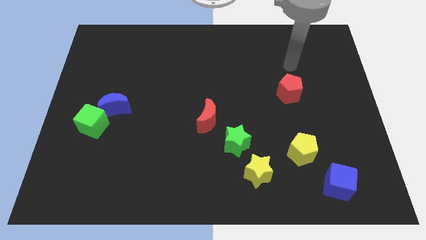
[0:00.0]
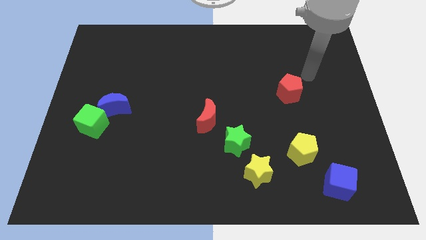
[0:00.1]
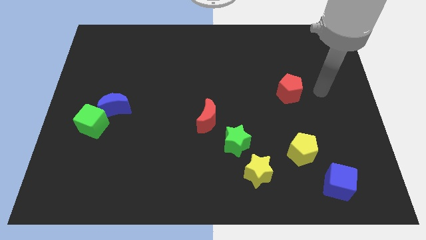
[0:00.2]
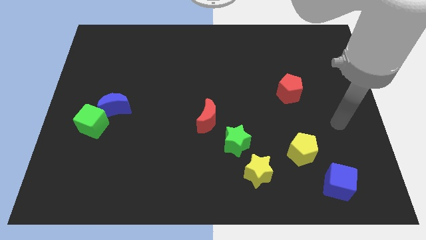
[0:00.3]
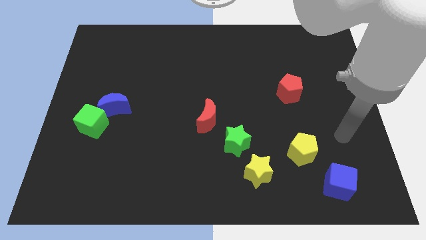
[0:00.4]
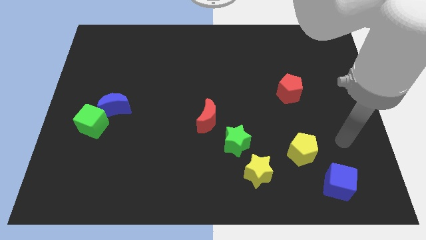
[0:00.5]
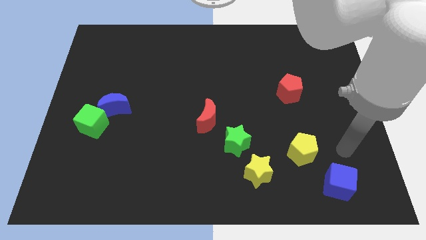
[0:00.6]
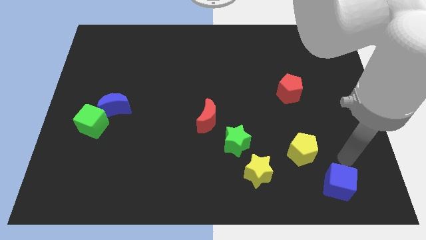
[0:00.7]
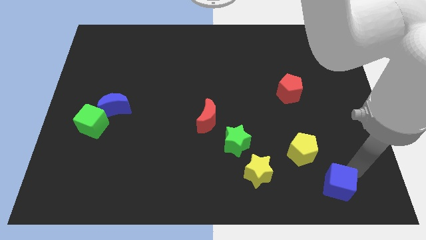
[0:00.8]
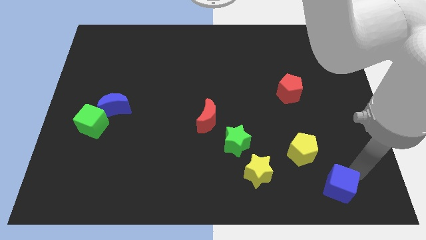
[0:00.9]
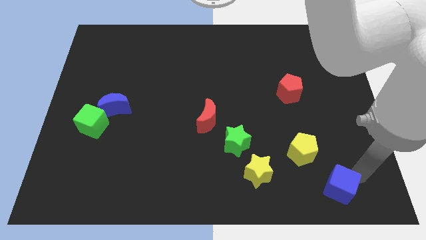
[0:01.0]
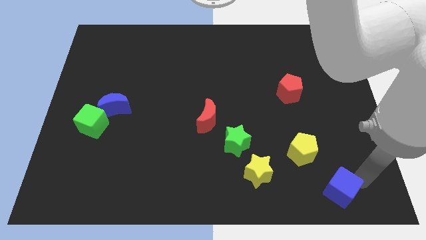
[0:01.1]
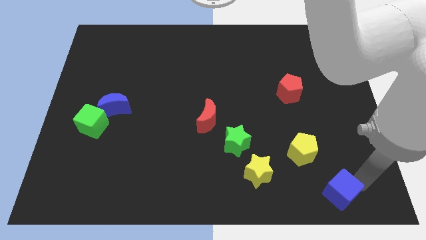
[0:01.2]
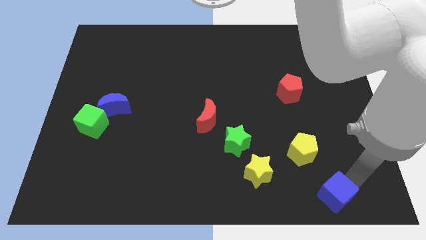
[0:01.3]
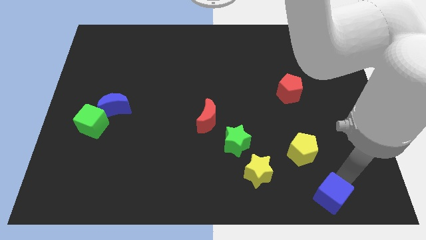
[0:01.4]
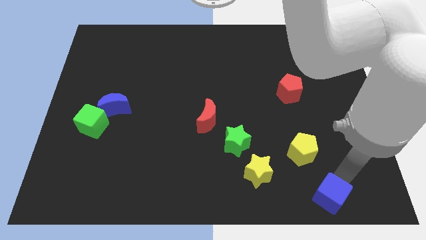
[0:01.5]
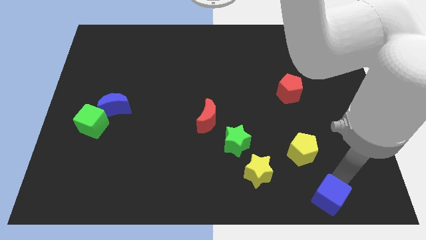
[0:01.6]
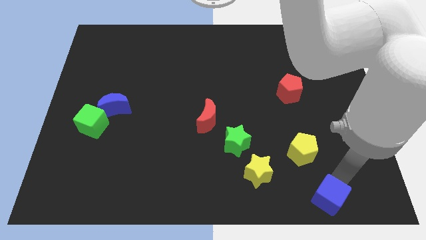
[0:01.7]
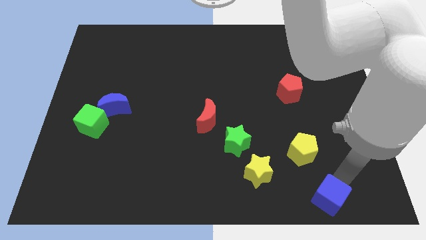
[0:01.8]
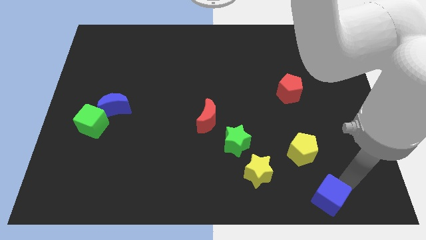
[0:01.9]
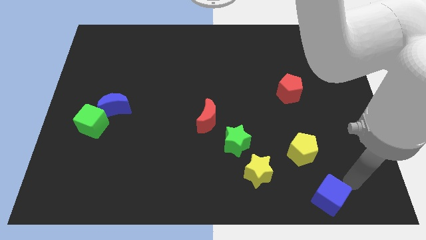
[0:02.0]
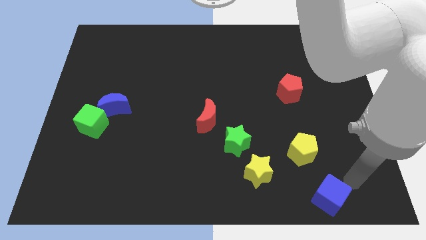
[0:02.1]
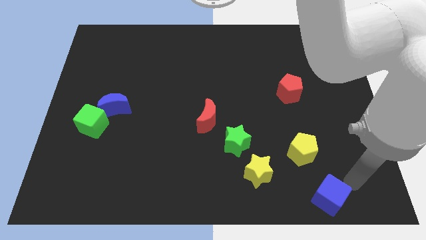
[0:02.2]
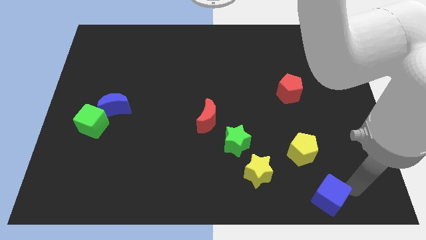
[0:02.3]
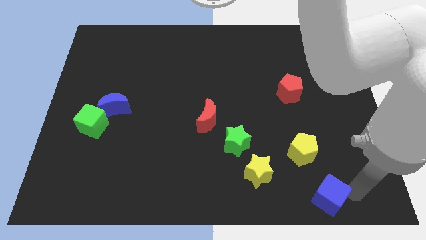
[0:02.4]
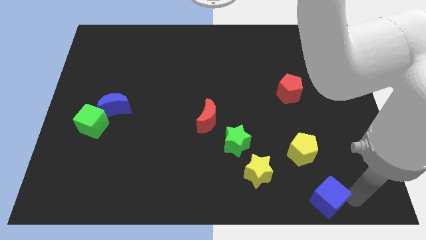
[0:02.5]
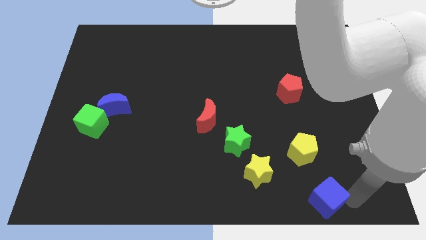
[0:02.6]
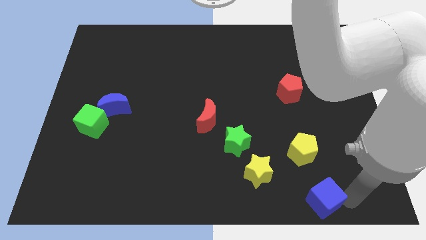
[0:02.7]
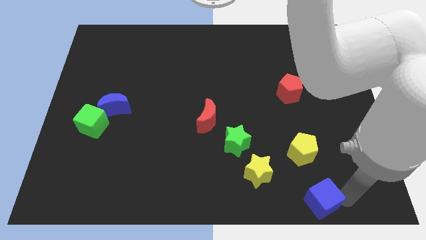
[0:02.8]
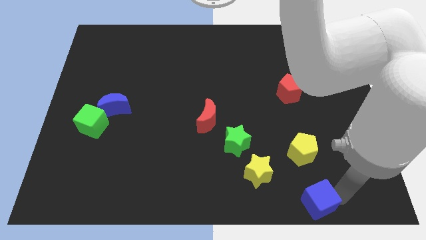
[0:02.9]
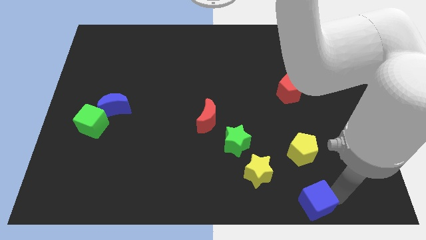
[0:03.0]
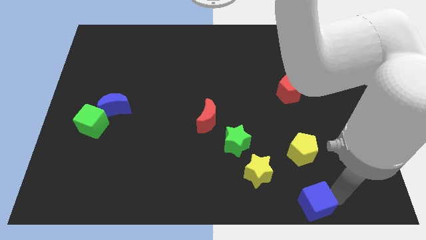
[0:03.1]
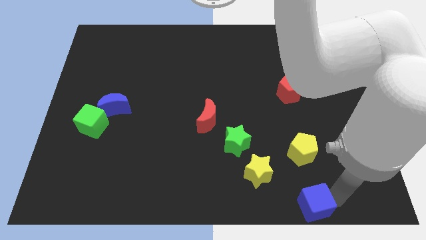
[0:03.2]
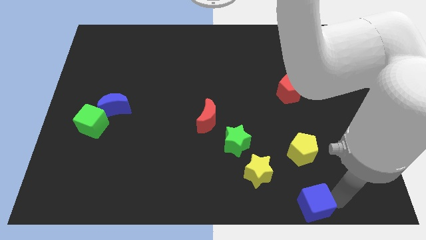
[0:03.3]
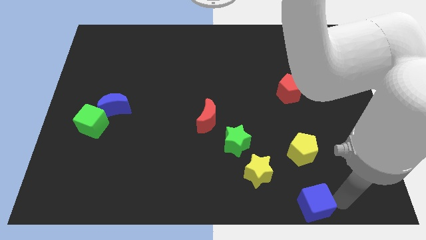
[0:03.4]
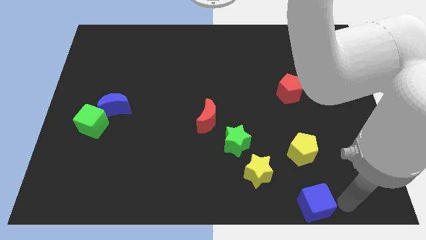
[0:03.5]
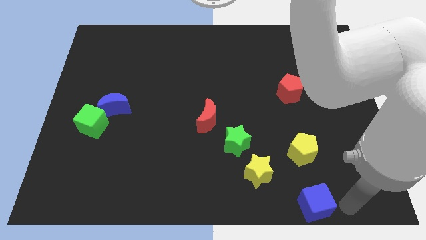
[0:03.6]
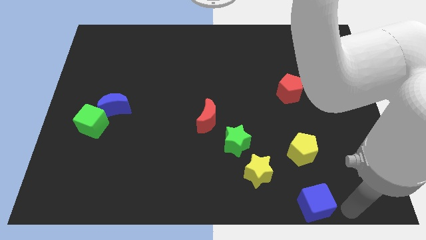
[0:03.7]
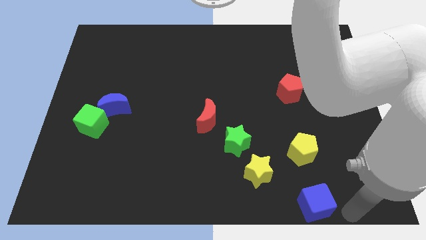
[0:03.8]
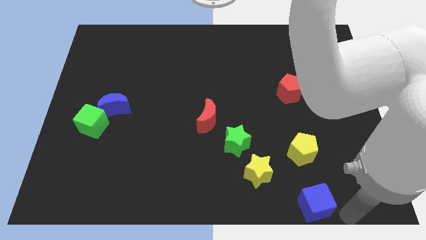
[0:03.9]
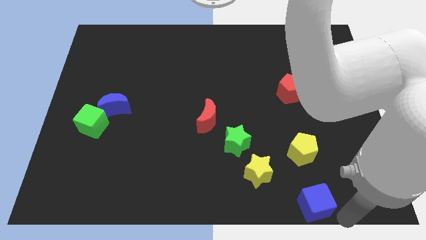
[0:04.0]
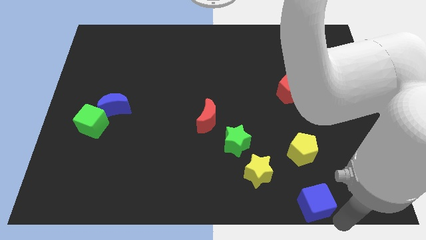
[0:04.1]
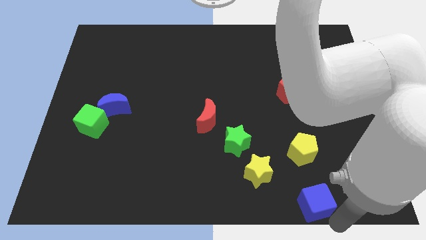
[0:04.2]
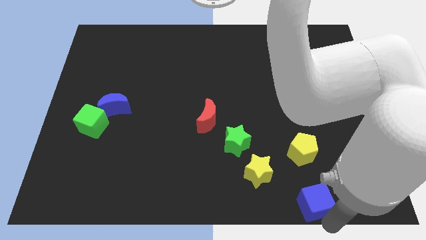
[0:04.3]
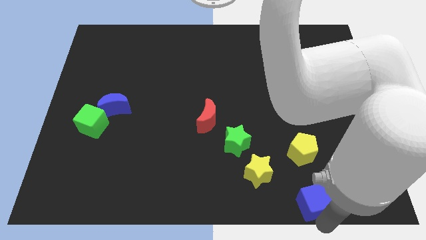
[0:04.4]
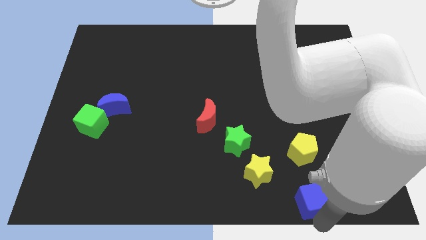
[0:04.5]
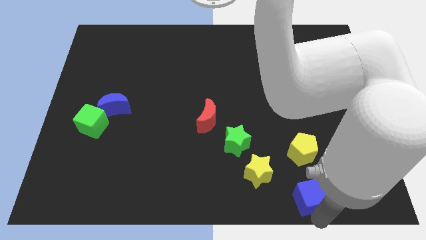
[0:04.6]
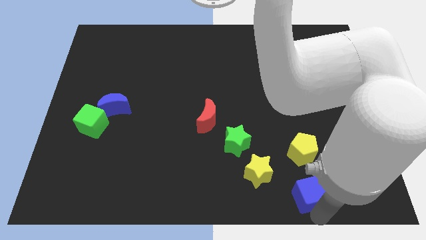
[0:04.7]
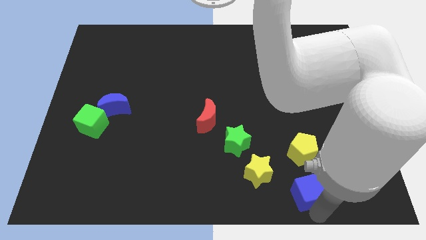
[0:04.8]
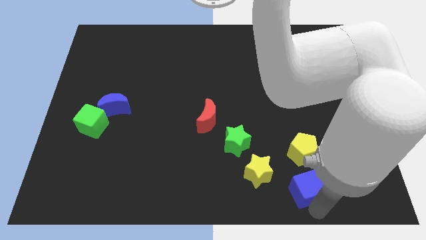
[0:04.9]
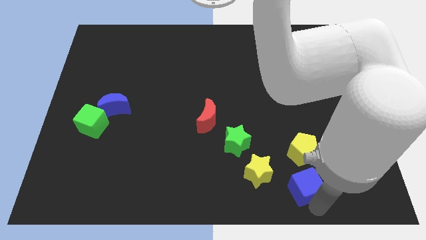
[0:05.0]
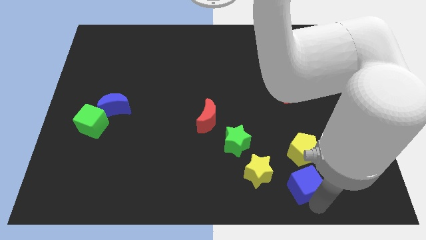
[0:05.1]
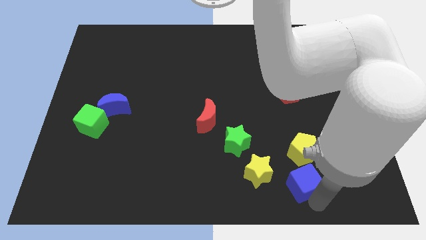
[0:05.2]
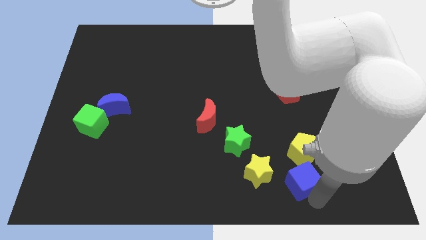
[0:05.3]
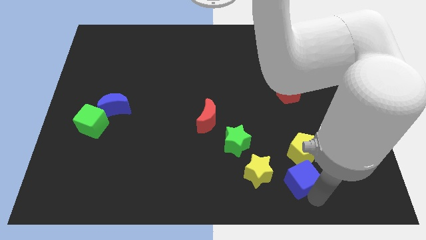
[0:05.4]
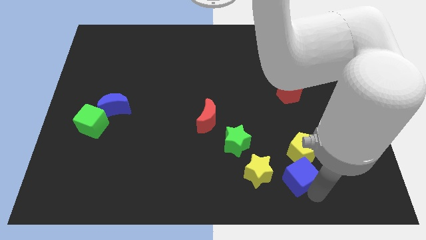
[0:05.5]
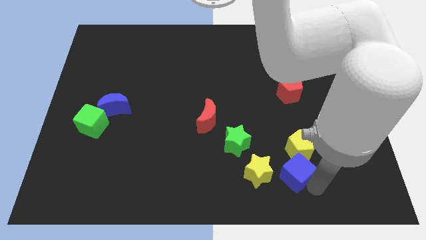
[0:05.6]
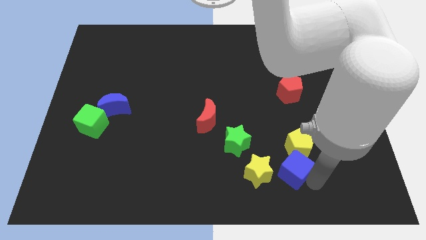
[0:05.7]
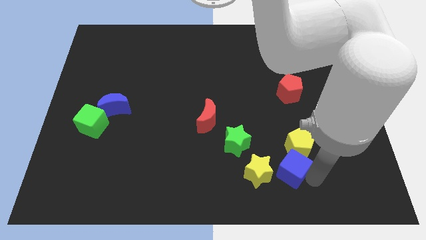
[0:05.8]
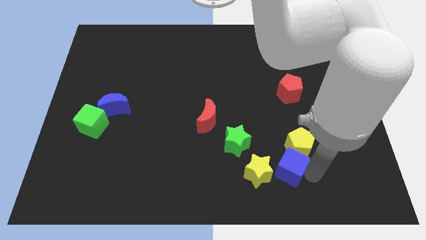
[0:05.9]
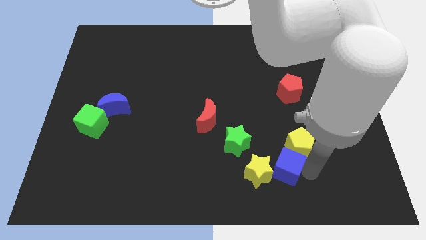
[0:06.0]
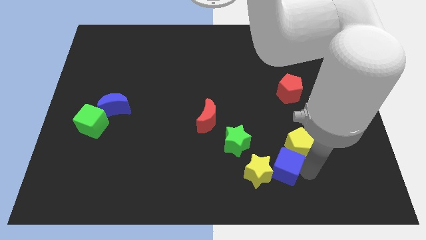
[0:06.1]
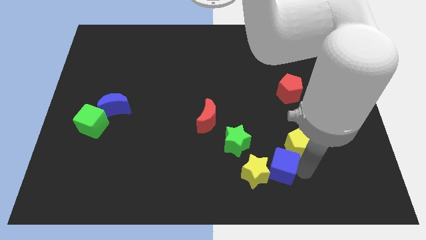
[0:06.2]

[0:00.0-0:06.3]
move the blue cube to the yellow star

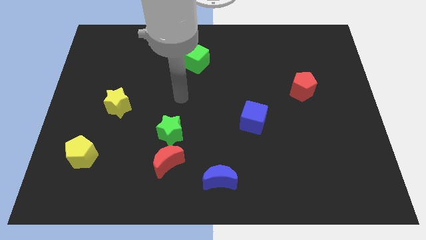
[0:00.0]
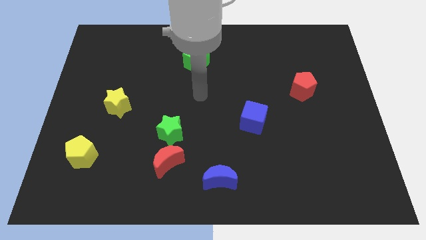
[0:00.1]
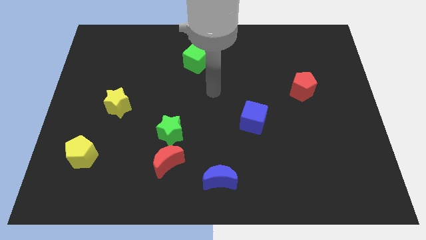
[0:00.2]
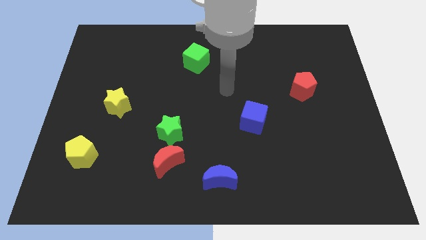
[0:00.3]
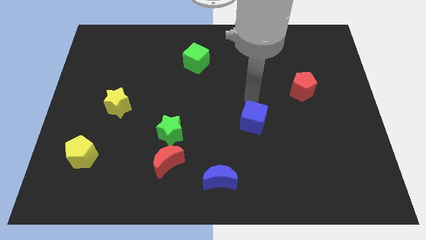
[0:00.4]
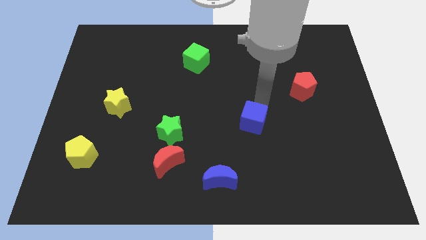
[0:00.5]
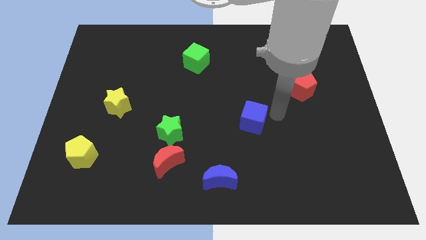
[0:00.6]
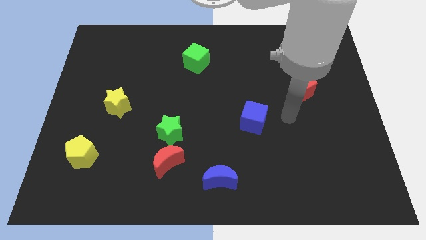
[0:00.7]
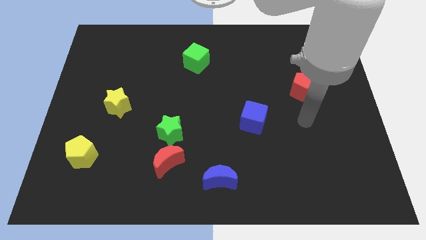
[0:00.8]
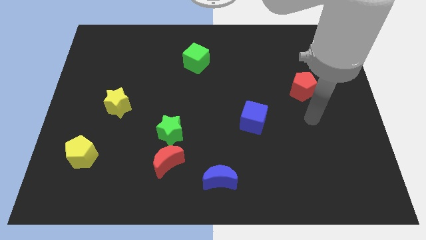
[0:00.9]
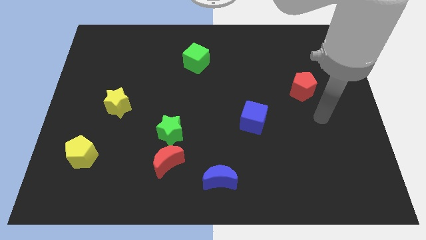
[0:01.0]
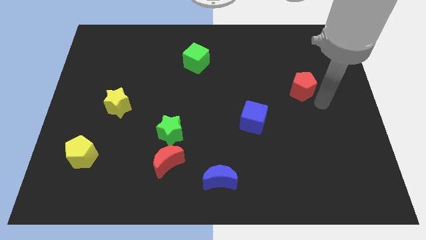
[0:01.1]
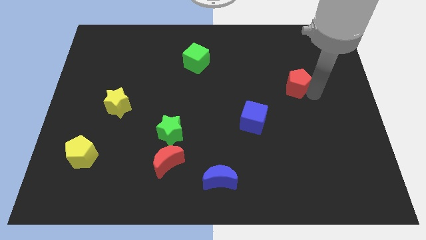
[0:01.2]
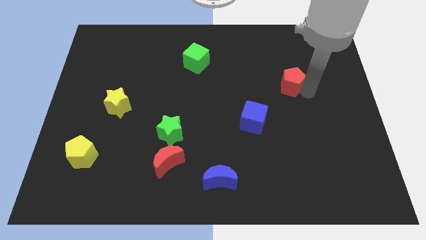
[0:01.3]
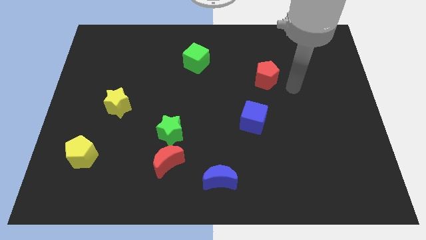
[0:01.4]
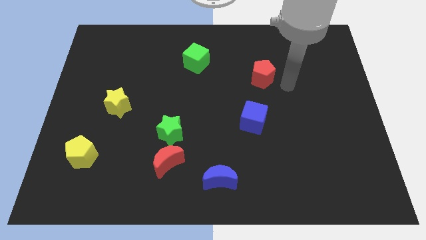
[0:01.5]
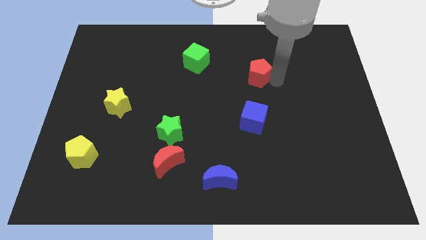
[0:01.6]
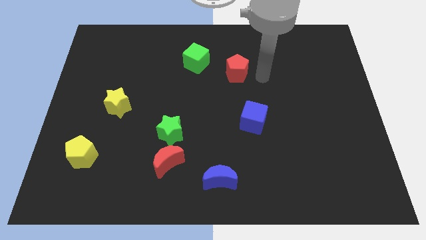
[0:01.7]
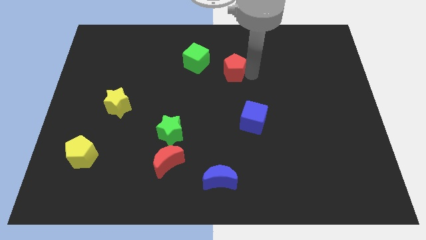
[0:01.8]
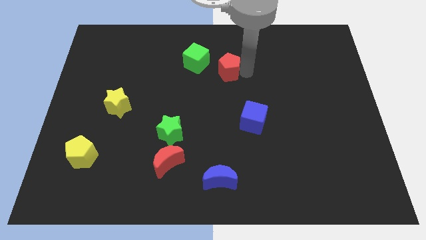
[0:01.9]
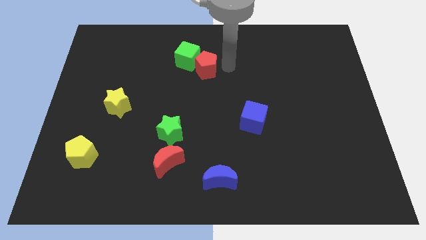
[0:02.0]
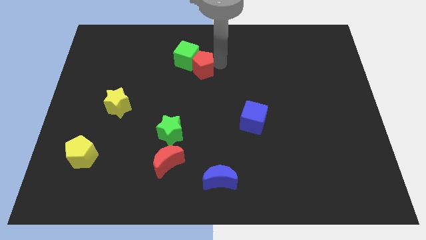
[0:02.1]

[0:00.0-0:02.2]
put the red pentagon next to the green cube
